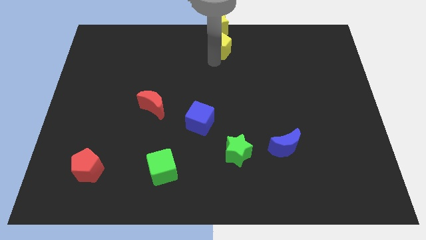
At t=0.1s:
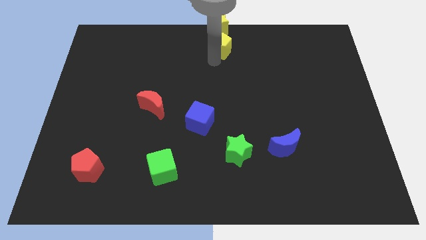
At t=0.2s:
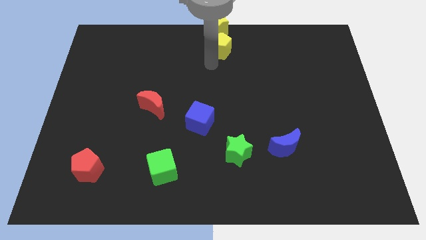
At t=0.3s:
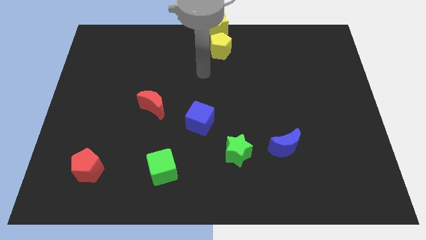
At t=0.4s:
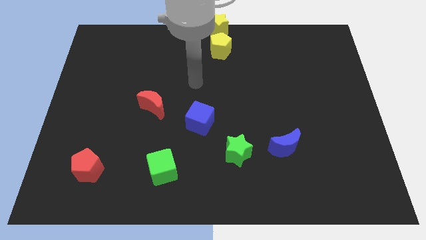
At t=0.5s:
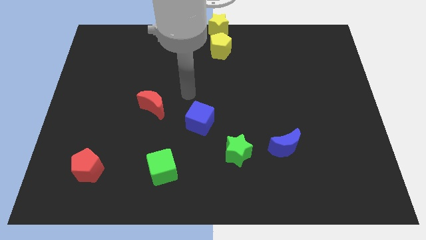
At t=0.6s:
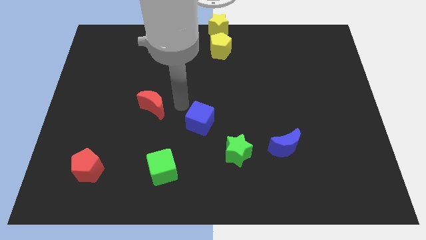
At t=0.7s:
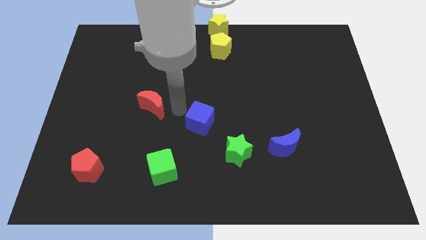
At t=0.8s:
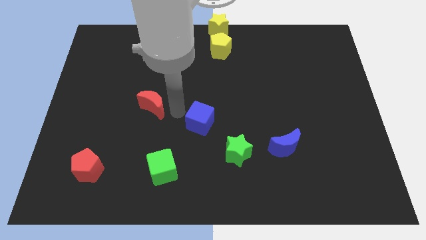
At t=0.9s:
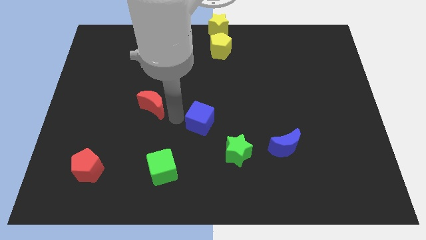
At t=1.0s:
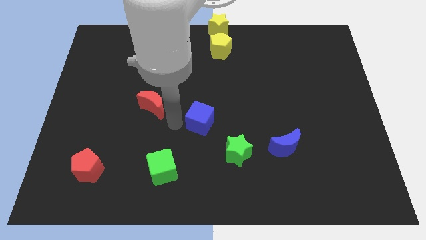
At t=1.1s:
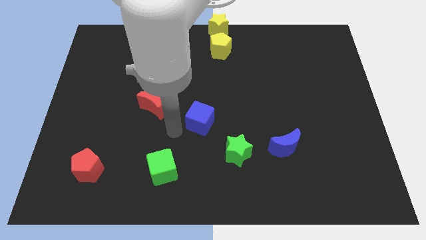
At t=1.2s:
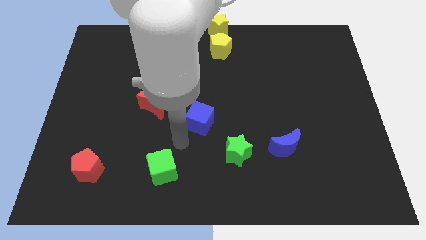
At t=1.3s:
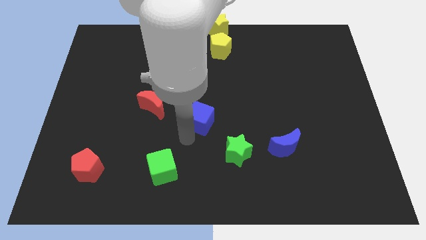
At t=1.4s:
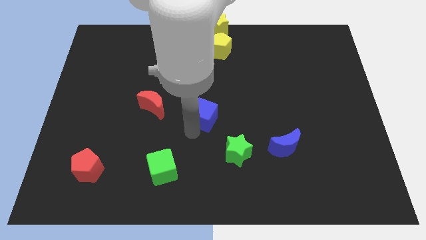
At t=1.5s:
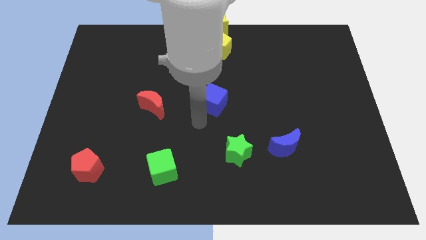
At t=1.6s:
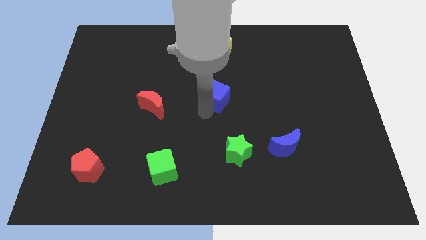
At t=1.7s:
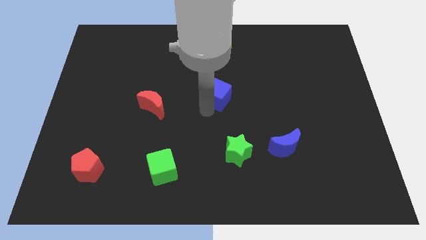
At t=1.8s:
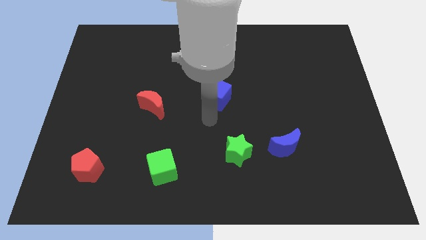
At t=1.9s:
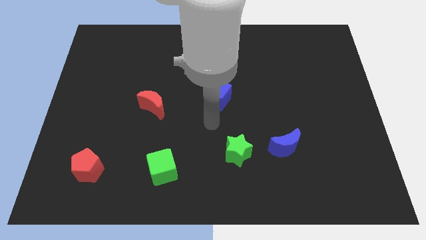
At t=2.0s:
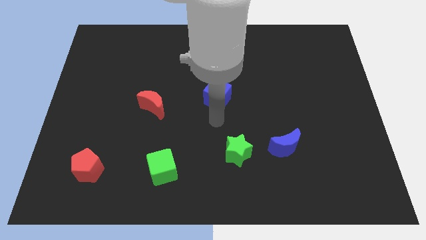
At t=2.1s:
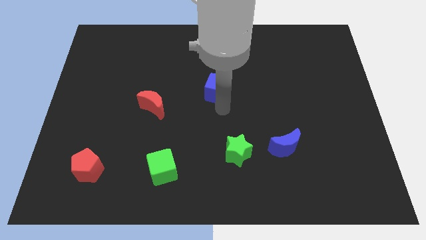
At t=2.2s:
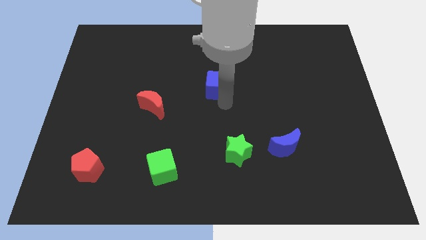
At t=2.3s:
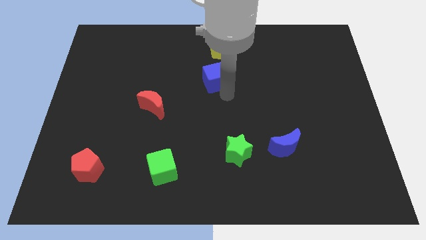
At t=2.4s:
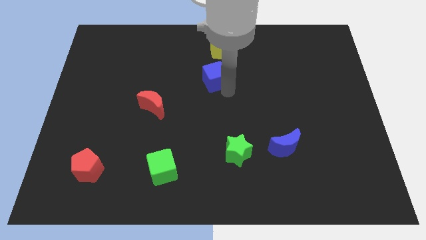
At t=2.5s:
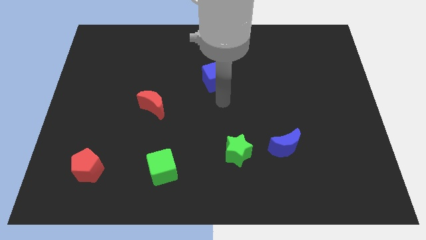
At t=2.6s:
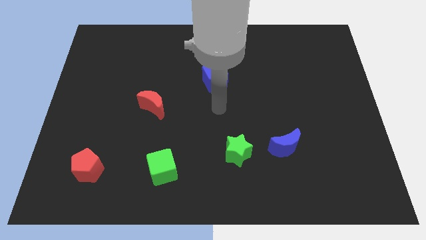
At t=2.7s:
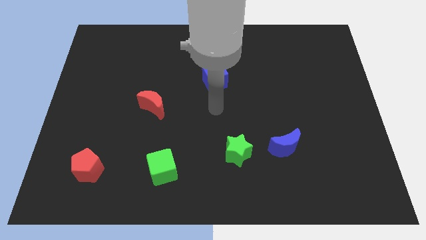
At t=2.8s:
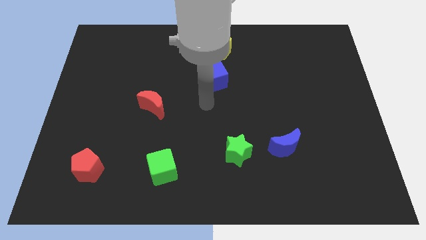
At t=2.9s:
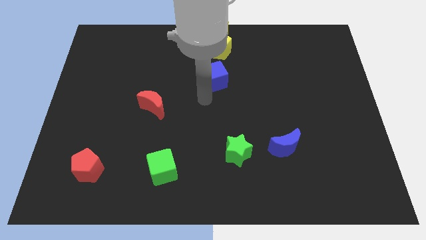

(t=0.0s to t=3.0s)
push the blue cube towards the top

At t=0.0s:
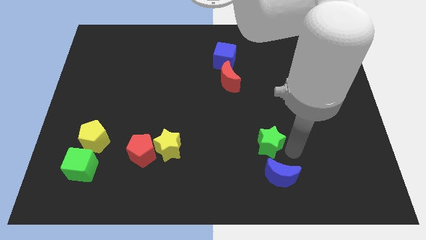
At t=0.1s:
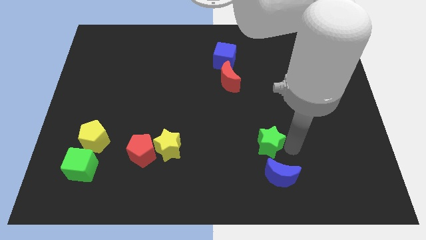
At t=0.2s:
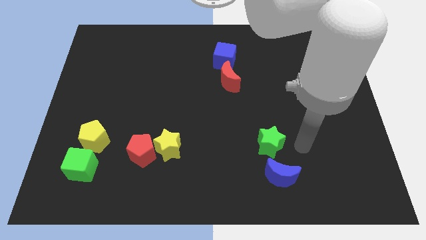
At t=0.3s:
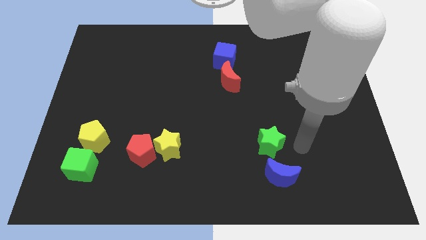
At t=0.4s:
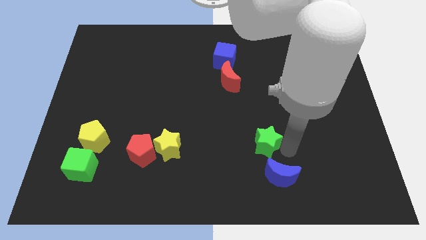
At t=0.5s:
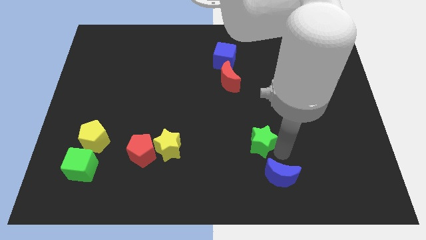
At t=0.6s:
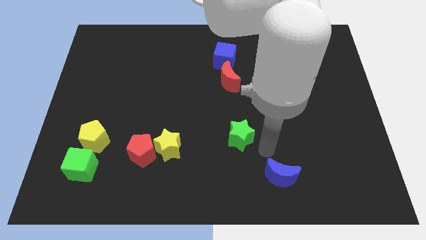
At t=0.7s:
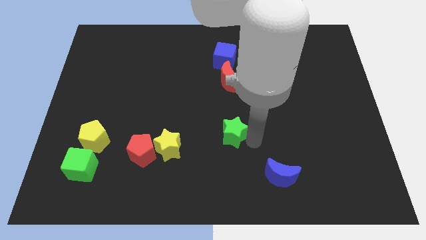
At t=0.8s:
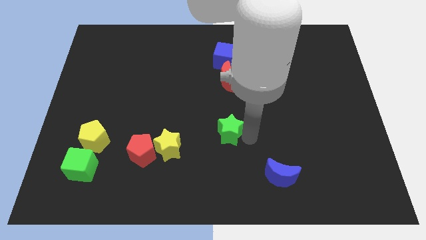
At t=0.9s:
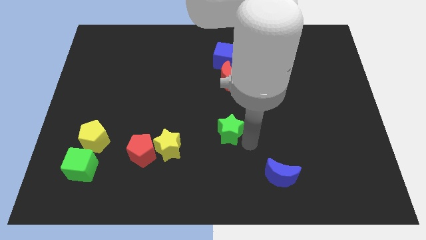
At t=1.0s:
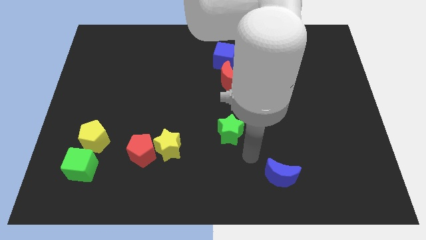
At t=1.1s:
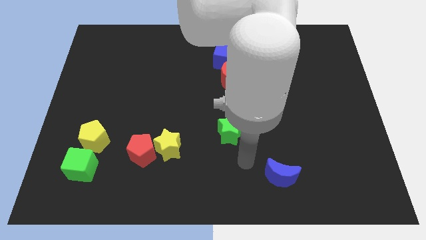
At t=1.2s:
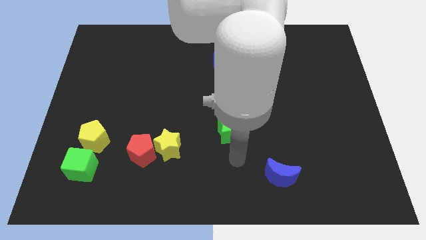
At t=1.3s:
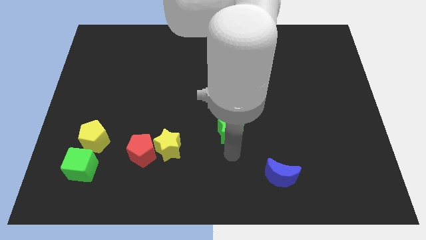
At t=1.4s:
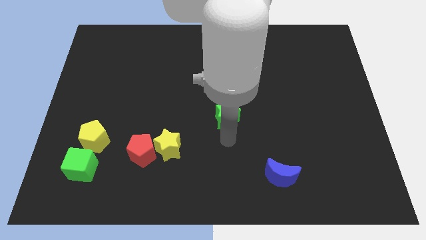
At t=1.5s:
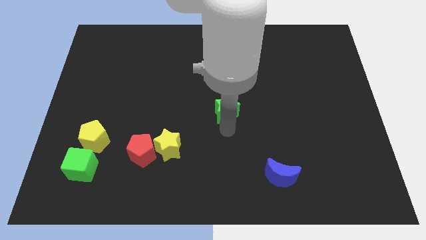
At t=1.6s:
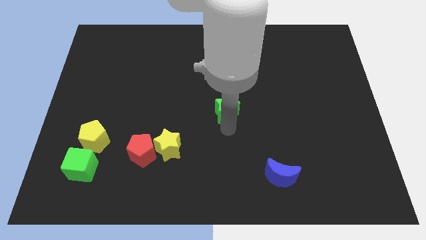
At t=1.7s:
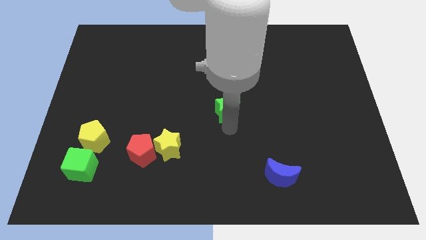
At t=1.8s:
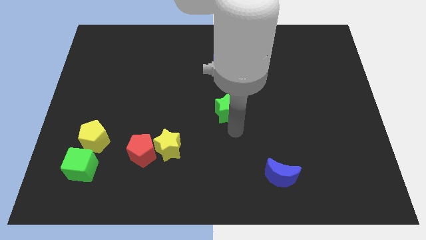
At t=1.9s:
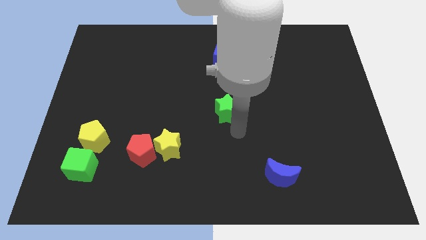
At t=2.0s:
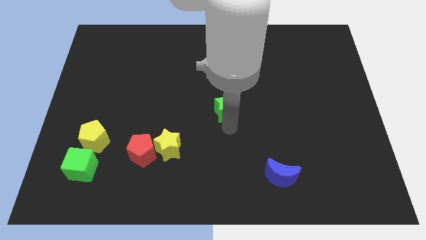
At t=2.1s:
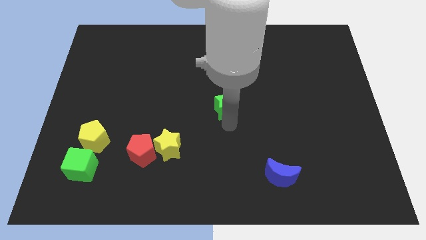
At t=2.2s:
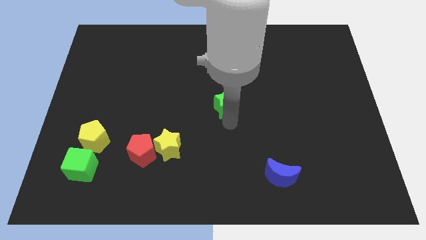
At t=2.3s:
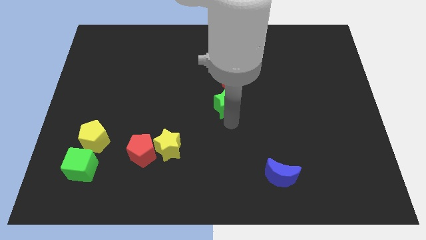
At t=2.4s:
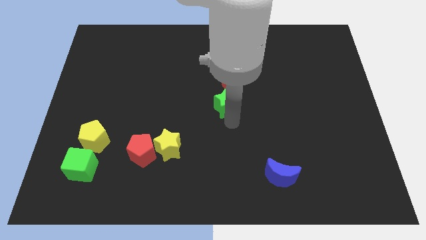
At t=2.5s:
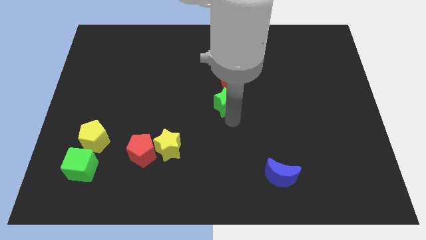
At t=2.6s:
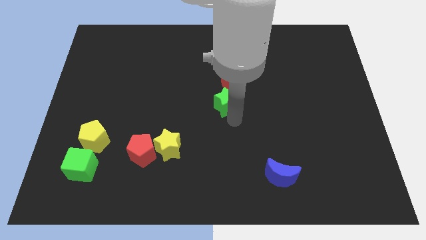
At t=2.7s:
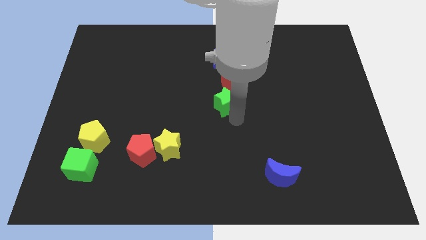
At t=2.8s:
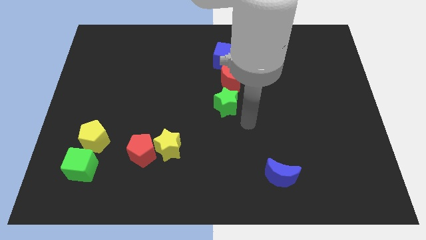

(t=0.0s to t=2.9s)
put the green star at the center of the board

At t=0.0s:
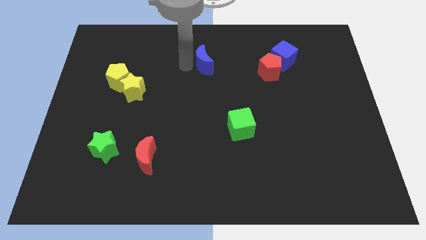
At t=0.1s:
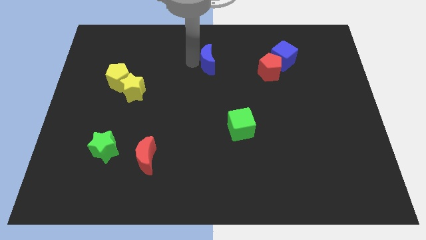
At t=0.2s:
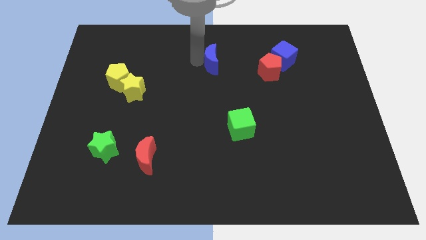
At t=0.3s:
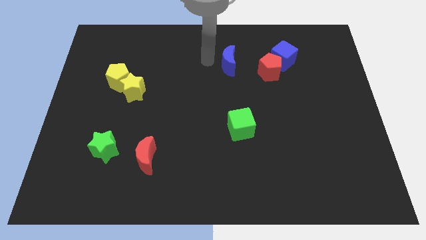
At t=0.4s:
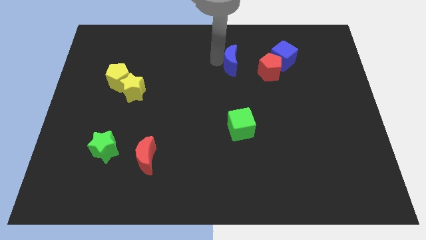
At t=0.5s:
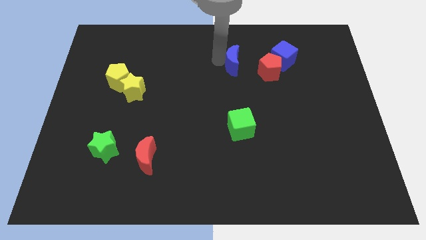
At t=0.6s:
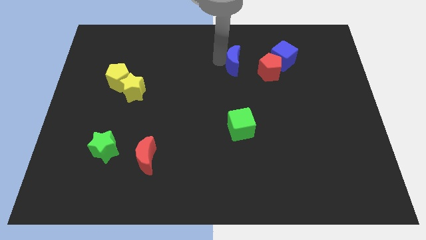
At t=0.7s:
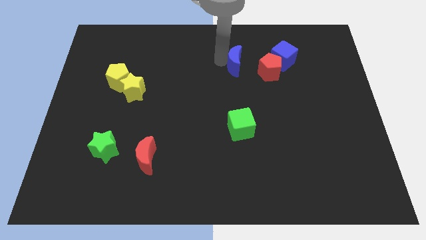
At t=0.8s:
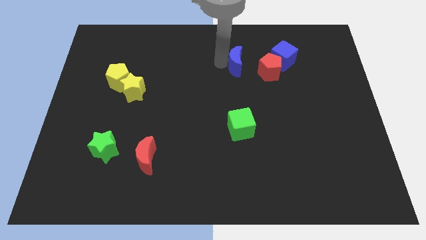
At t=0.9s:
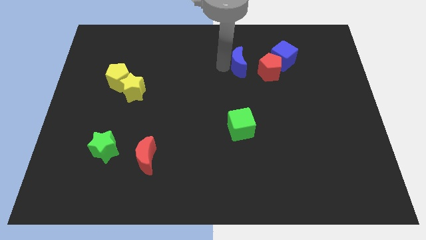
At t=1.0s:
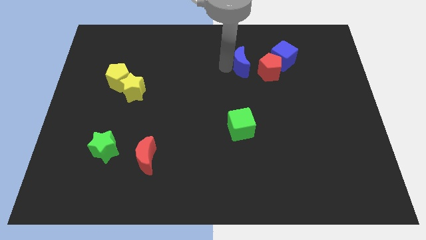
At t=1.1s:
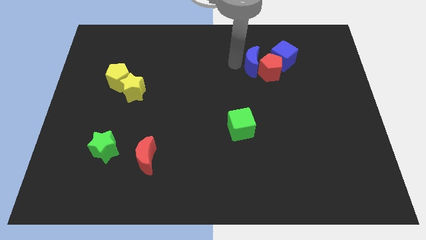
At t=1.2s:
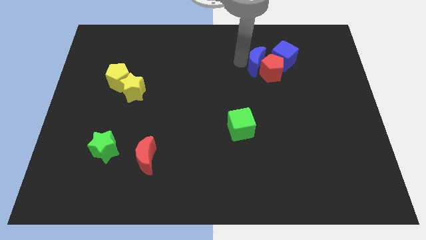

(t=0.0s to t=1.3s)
move the blue crescent into the red pentagon

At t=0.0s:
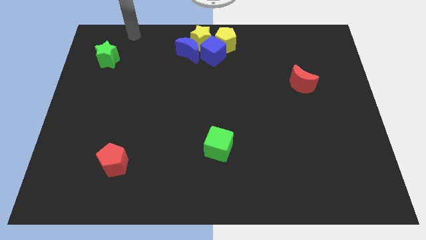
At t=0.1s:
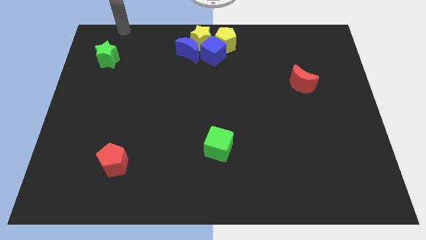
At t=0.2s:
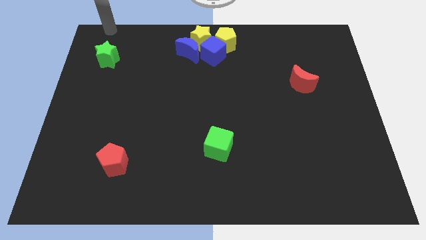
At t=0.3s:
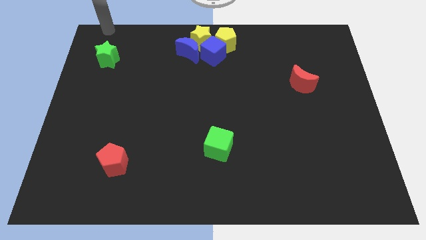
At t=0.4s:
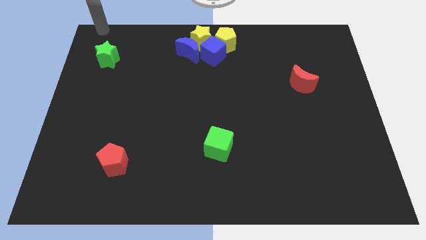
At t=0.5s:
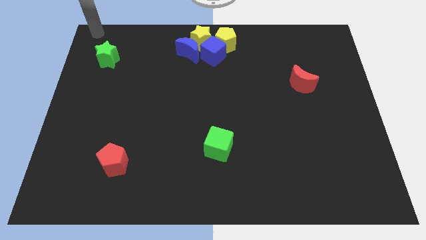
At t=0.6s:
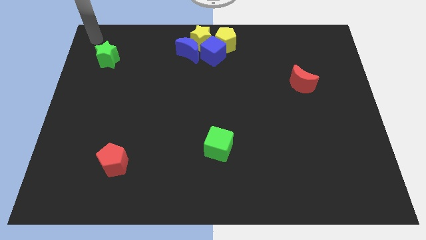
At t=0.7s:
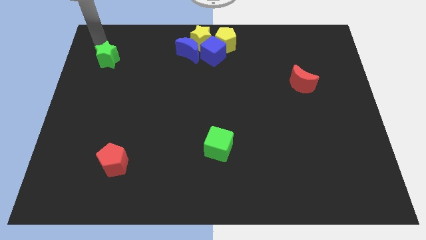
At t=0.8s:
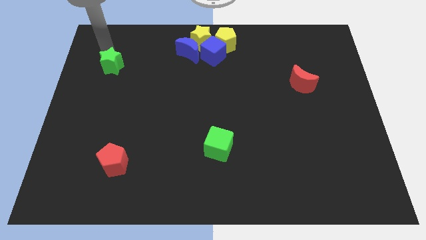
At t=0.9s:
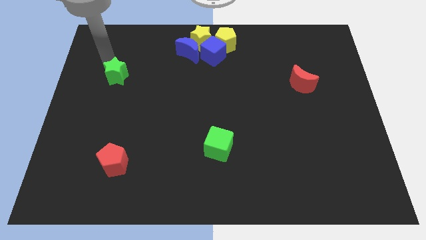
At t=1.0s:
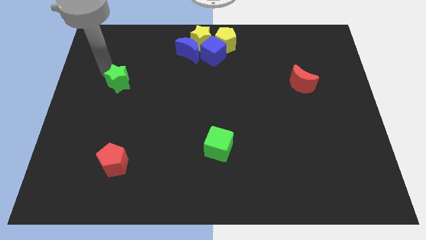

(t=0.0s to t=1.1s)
move the arm towards the green star

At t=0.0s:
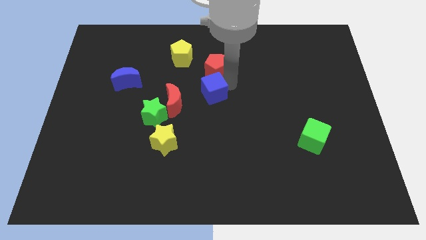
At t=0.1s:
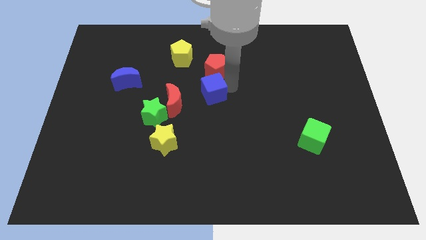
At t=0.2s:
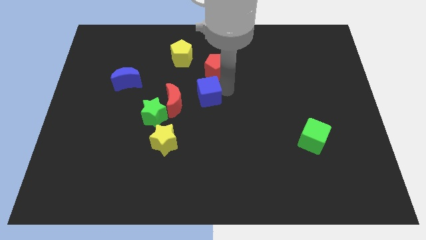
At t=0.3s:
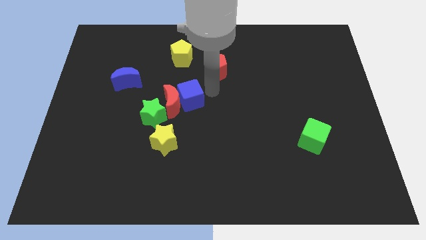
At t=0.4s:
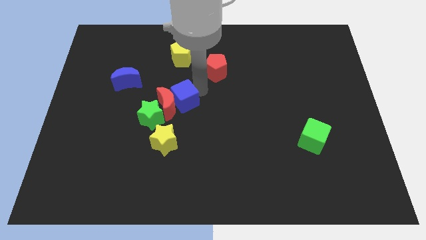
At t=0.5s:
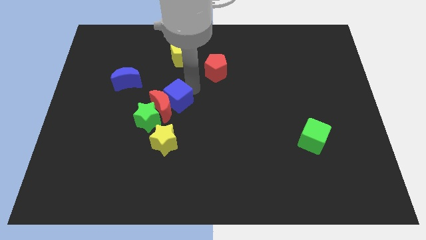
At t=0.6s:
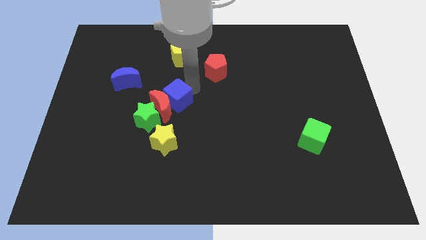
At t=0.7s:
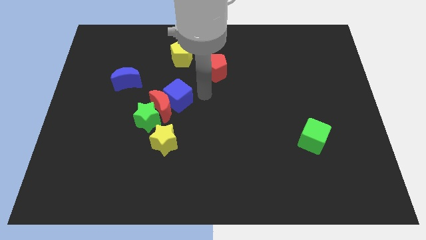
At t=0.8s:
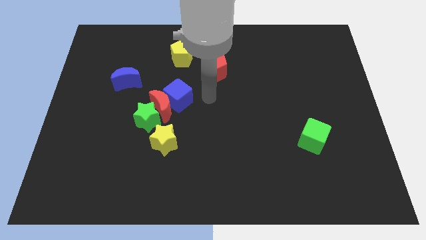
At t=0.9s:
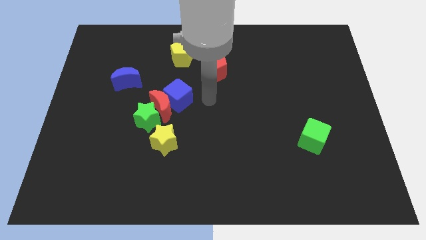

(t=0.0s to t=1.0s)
push the blue cube into the red crescent
